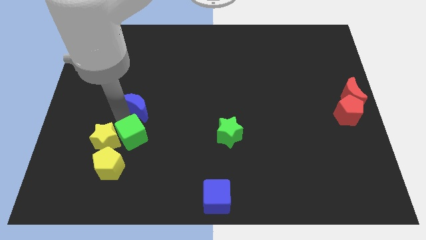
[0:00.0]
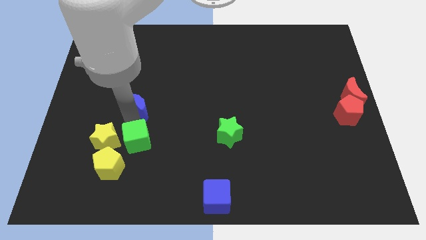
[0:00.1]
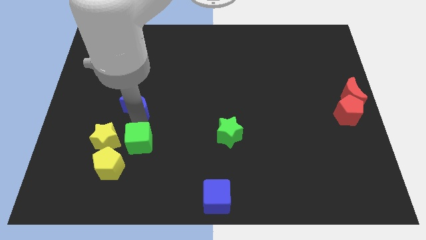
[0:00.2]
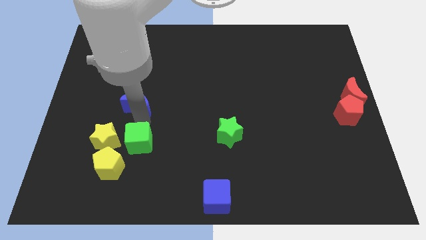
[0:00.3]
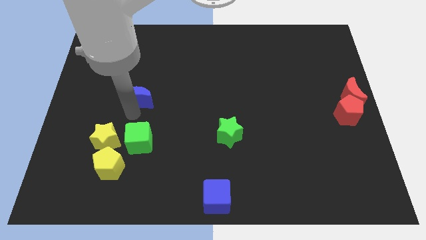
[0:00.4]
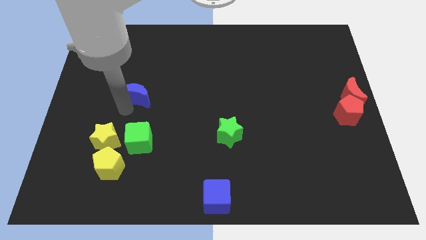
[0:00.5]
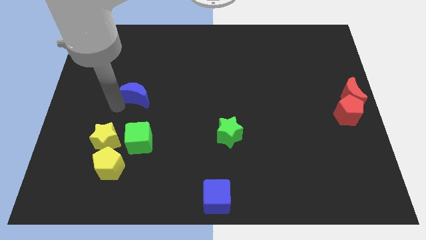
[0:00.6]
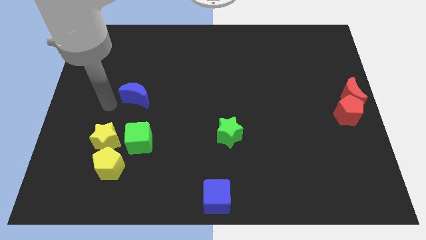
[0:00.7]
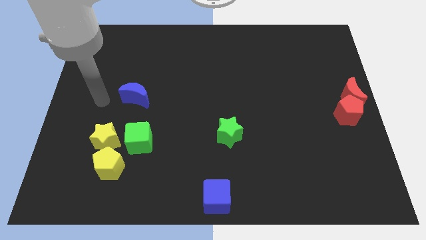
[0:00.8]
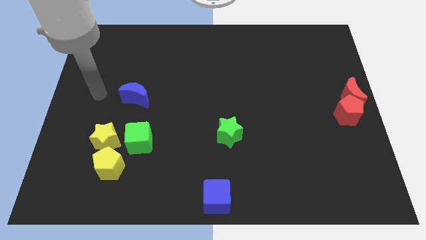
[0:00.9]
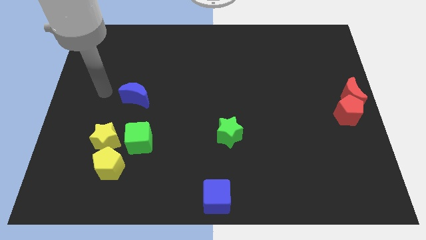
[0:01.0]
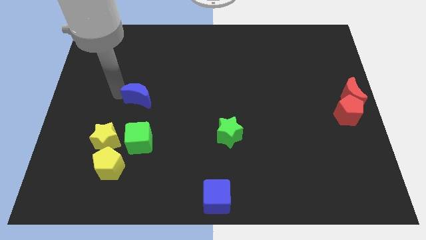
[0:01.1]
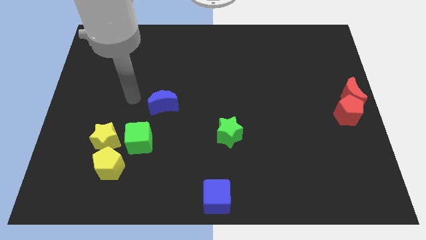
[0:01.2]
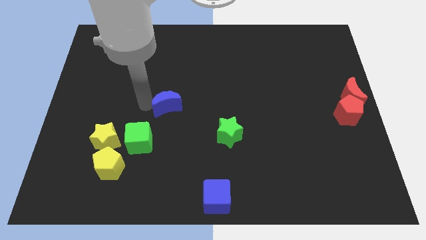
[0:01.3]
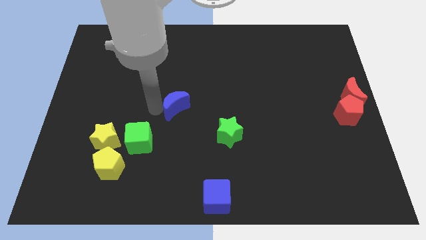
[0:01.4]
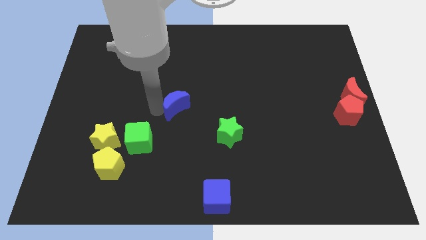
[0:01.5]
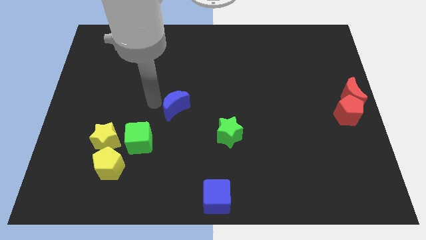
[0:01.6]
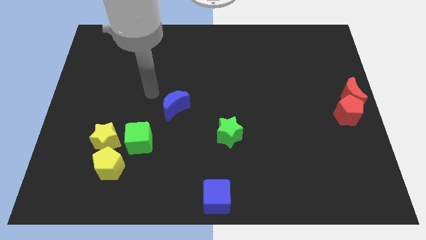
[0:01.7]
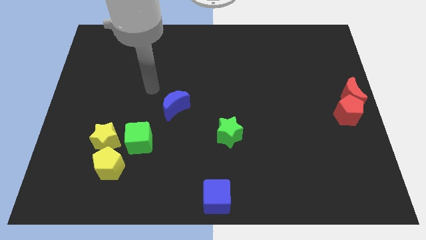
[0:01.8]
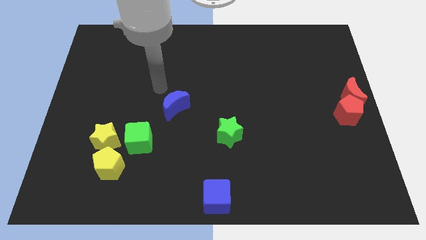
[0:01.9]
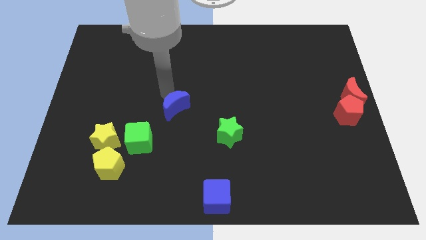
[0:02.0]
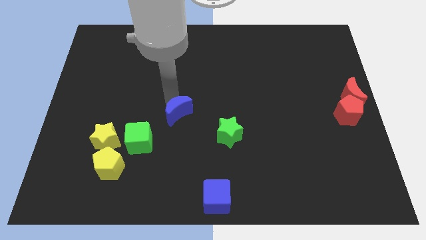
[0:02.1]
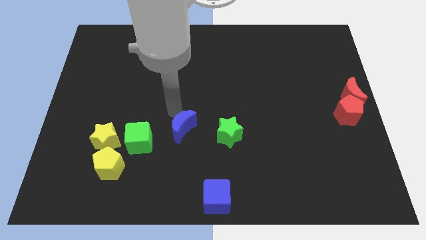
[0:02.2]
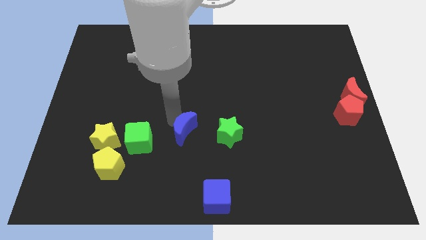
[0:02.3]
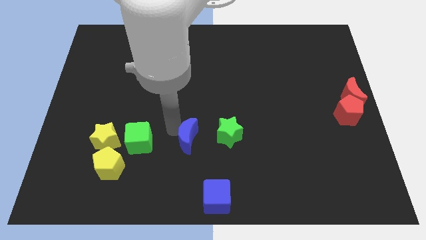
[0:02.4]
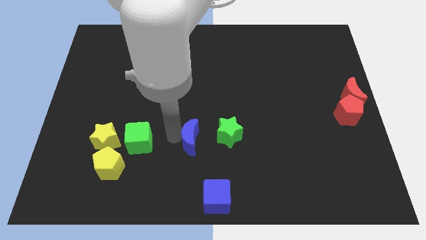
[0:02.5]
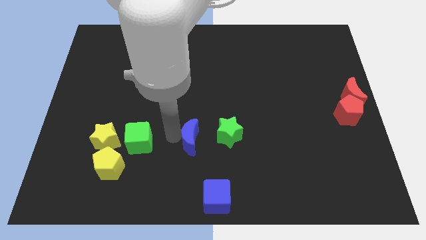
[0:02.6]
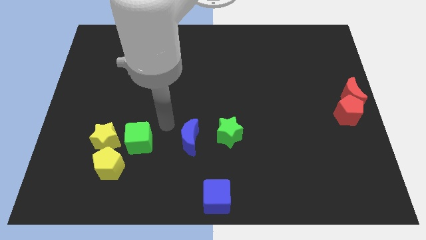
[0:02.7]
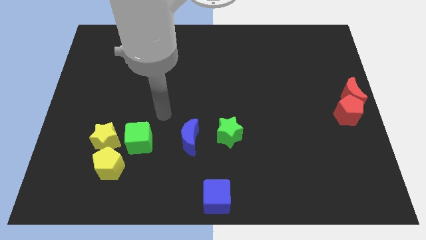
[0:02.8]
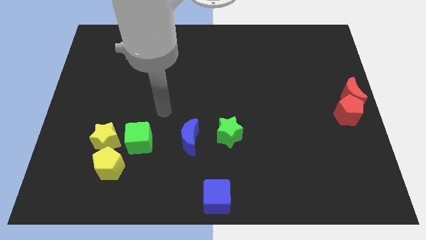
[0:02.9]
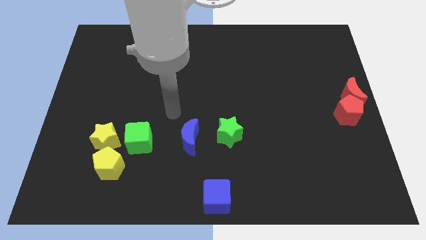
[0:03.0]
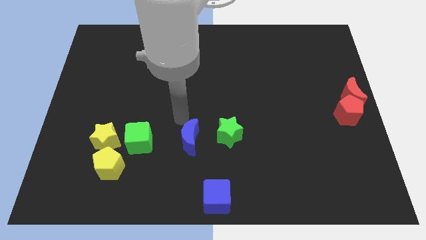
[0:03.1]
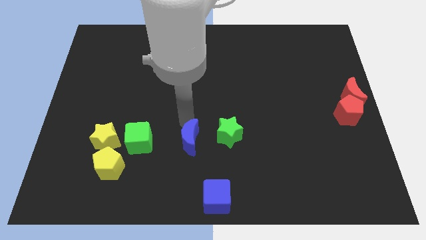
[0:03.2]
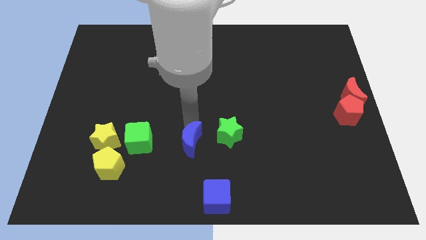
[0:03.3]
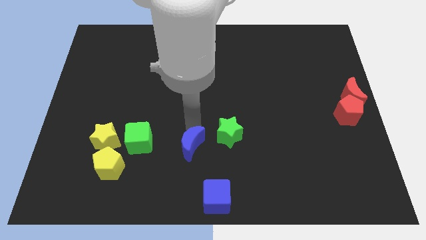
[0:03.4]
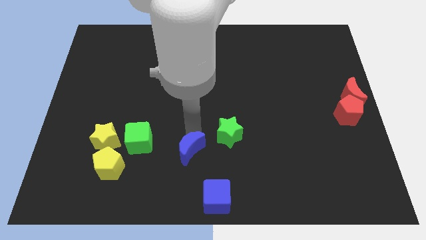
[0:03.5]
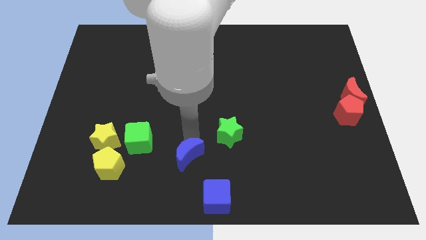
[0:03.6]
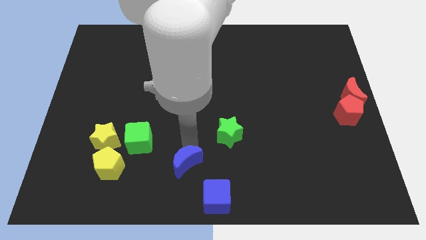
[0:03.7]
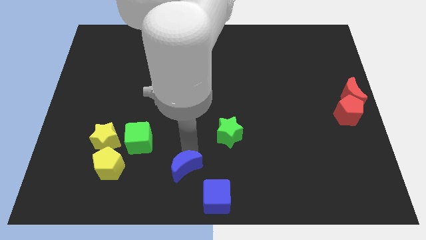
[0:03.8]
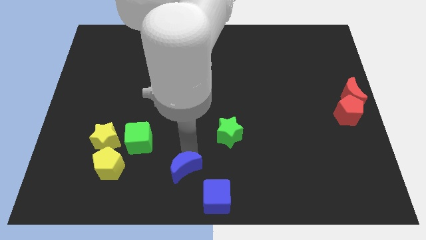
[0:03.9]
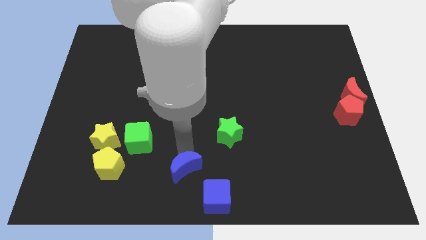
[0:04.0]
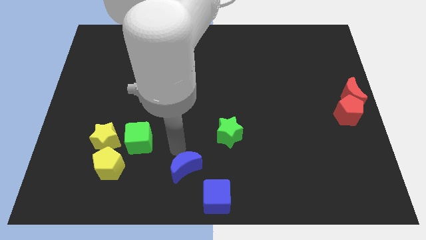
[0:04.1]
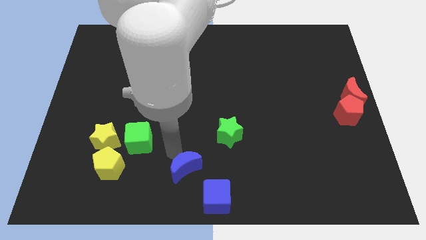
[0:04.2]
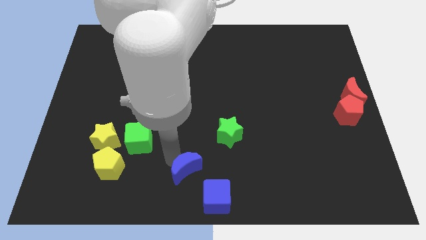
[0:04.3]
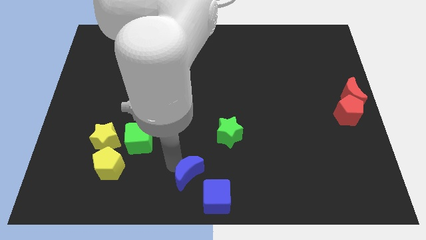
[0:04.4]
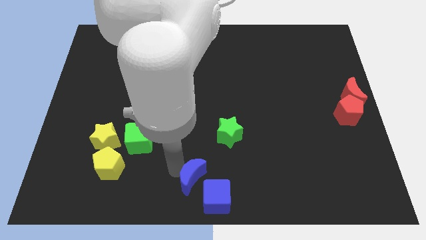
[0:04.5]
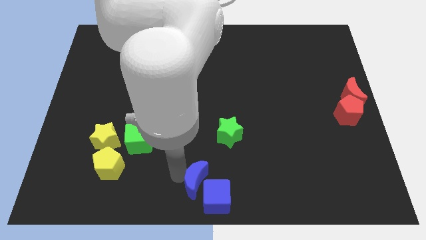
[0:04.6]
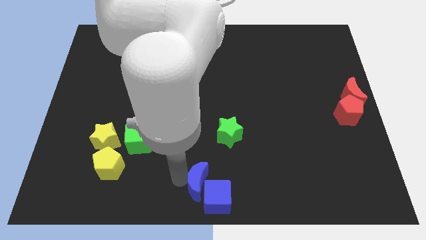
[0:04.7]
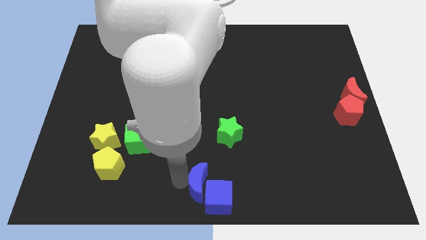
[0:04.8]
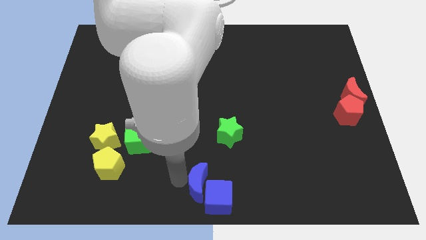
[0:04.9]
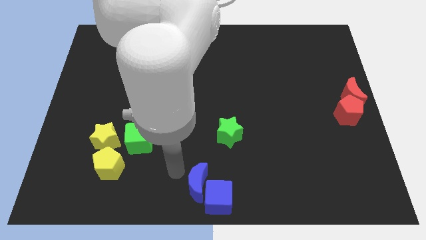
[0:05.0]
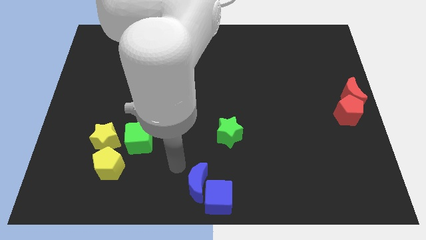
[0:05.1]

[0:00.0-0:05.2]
move blue moon beside blue cube

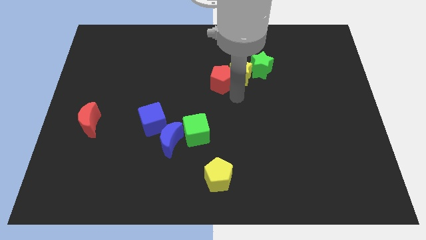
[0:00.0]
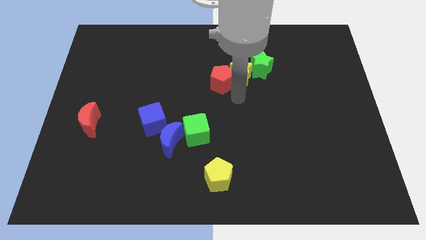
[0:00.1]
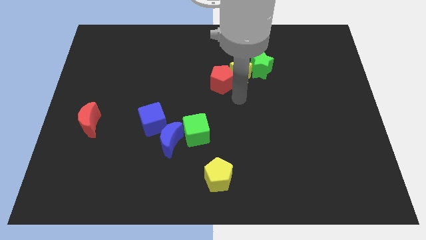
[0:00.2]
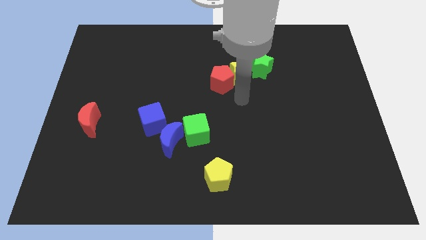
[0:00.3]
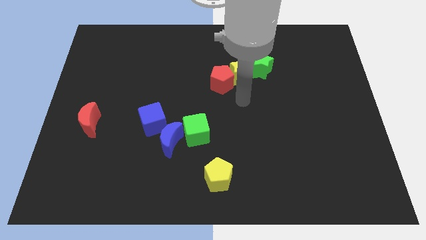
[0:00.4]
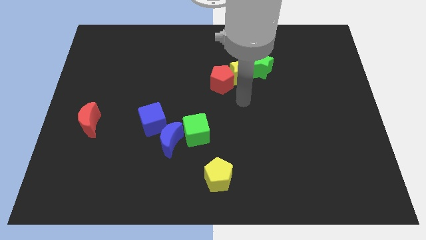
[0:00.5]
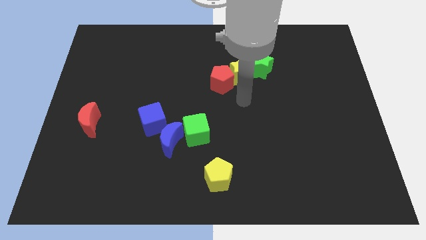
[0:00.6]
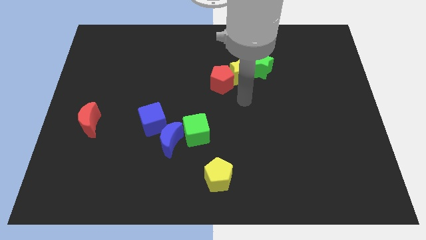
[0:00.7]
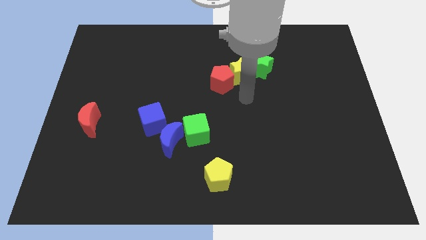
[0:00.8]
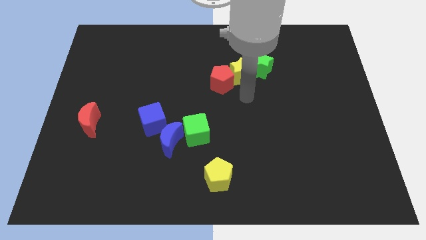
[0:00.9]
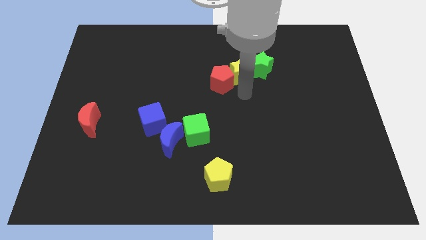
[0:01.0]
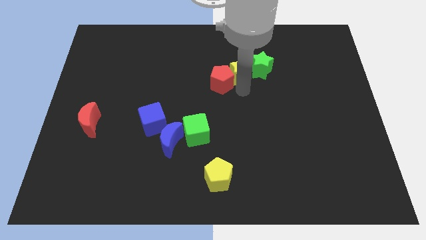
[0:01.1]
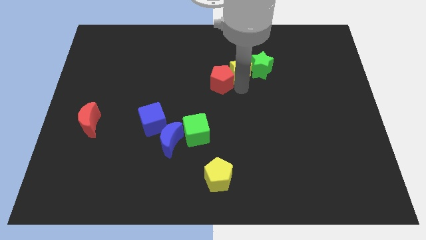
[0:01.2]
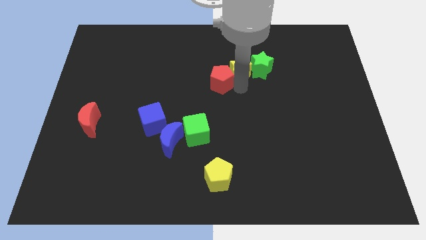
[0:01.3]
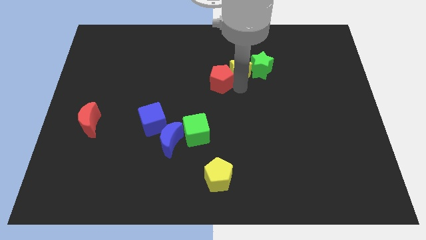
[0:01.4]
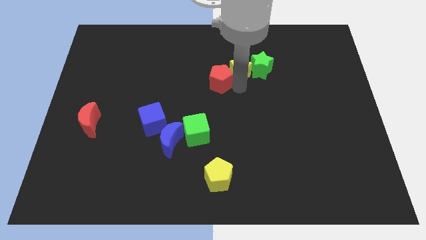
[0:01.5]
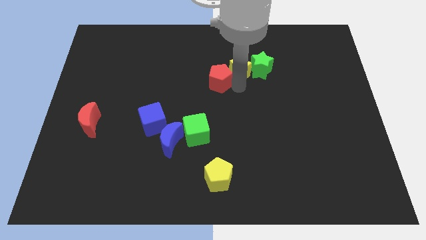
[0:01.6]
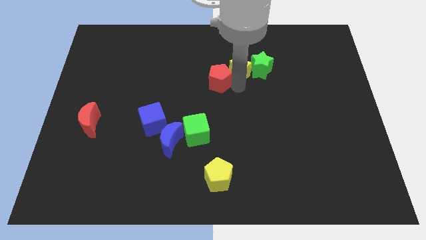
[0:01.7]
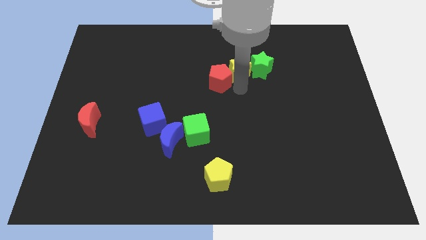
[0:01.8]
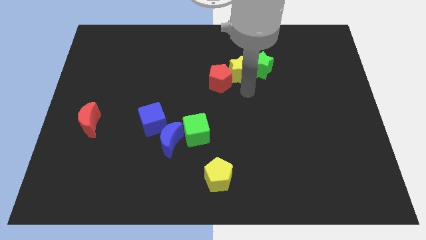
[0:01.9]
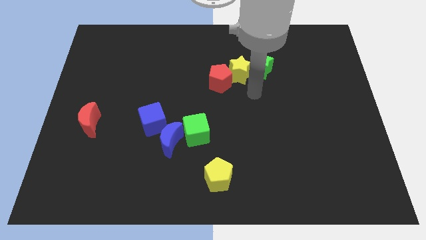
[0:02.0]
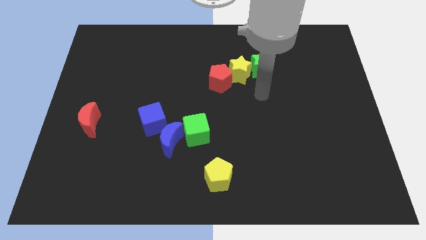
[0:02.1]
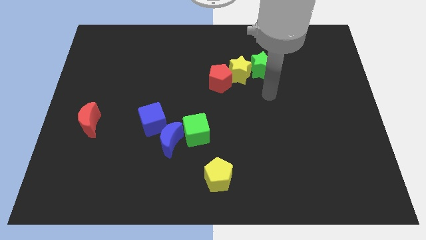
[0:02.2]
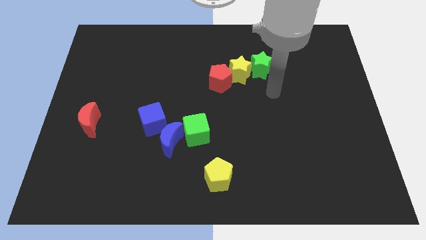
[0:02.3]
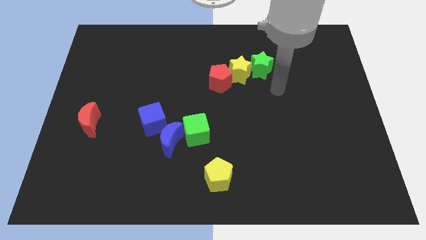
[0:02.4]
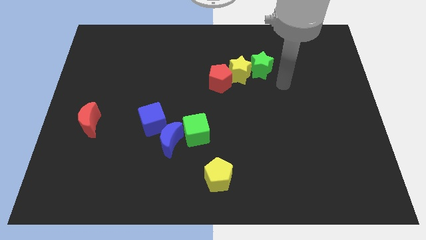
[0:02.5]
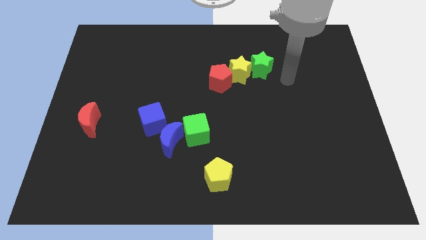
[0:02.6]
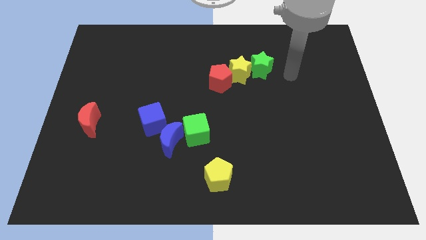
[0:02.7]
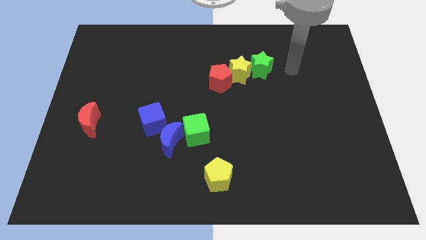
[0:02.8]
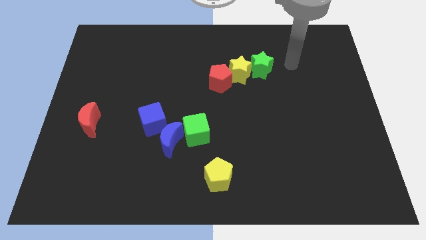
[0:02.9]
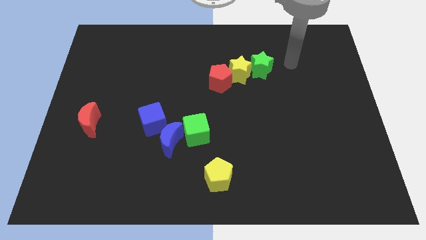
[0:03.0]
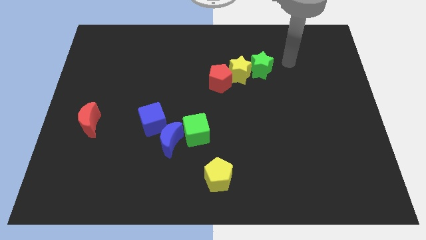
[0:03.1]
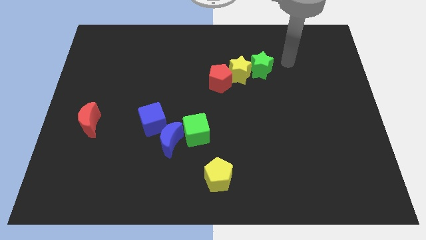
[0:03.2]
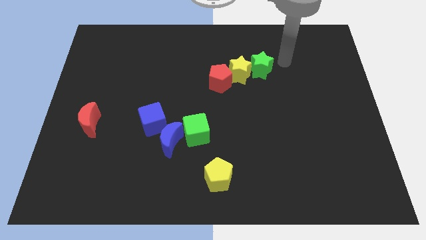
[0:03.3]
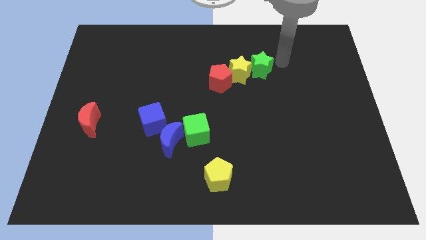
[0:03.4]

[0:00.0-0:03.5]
slightly push the red pentagon and yellow star towards the top

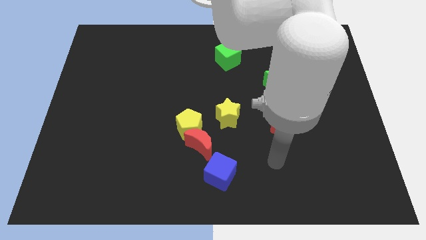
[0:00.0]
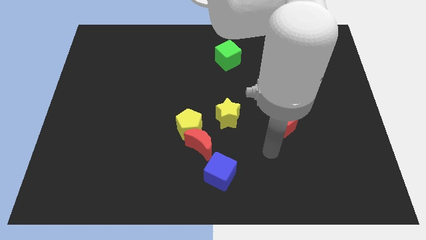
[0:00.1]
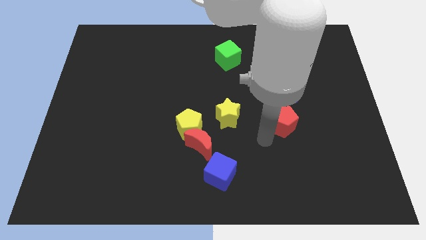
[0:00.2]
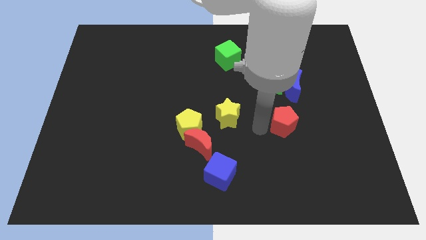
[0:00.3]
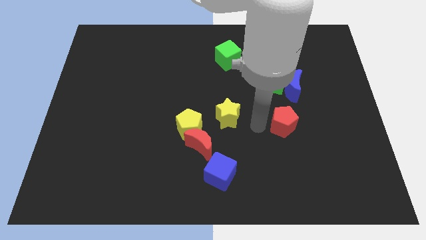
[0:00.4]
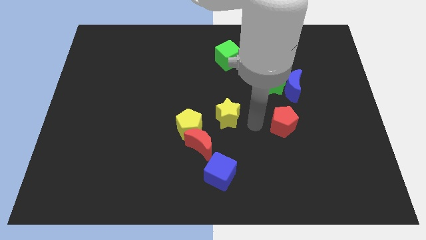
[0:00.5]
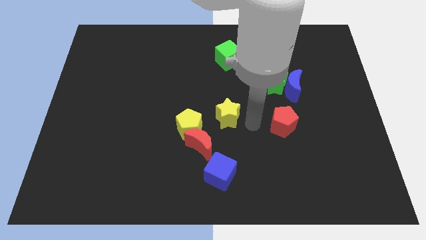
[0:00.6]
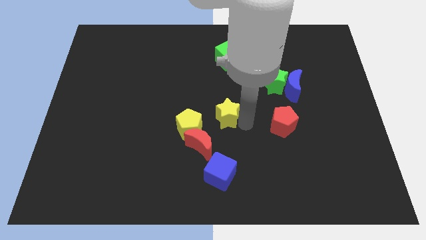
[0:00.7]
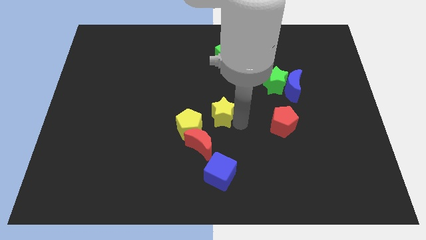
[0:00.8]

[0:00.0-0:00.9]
place the arm right to the yellow star
